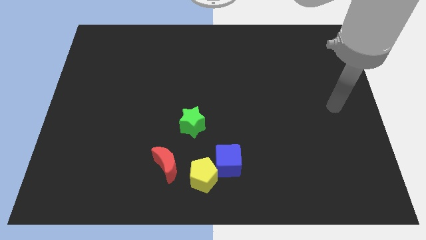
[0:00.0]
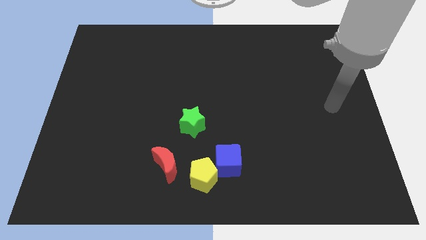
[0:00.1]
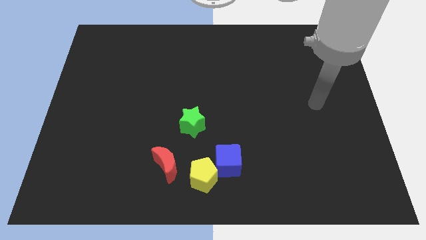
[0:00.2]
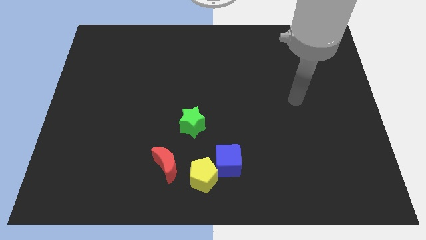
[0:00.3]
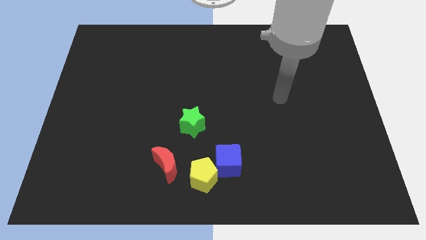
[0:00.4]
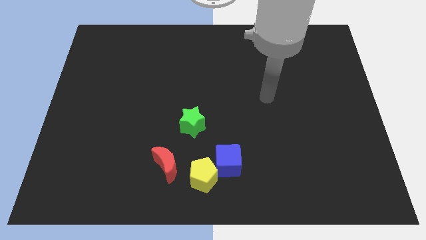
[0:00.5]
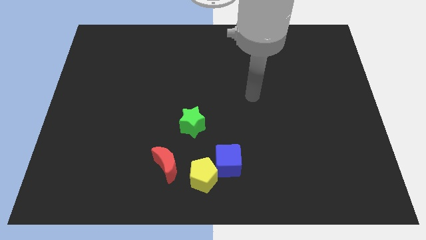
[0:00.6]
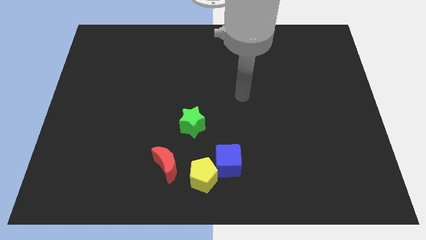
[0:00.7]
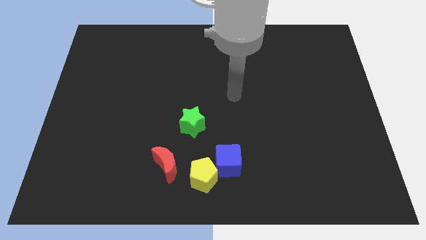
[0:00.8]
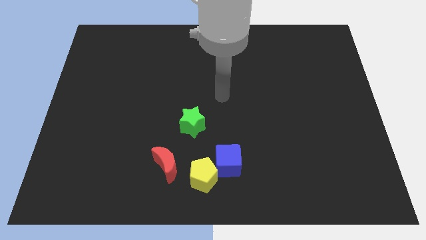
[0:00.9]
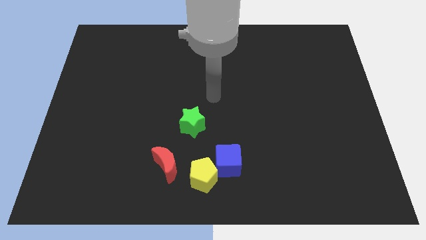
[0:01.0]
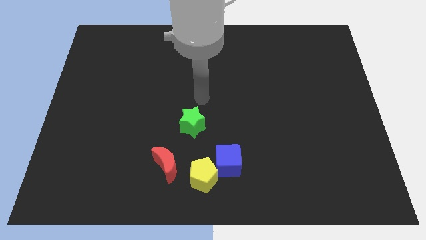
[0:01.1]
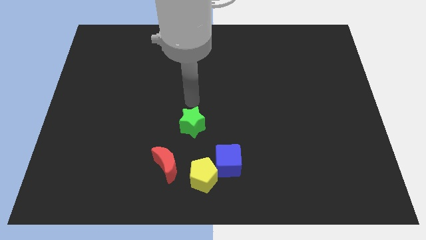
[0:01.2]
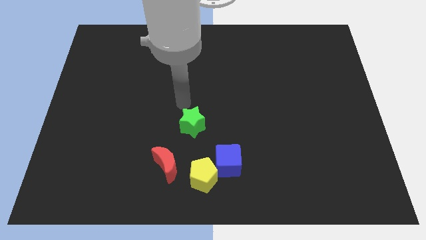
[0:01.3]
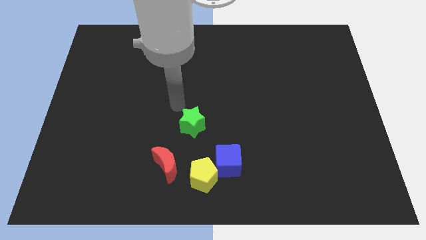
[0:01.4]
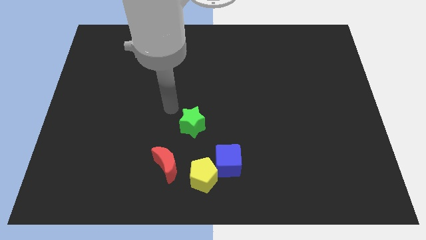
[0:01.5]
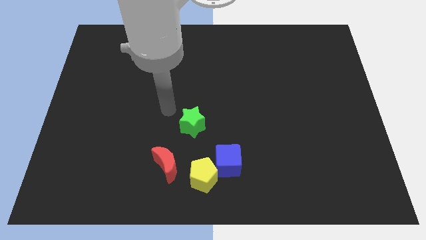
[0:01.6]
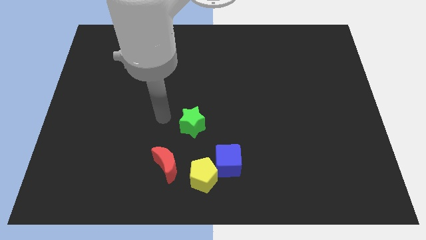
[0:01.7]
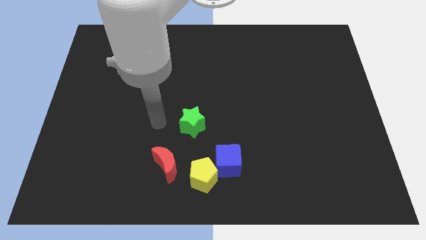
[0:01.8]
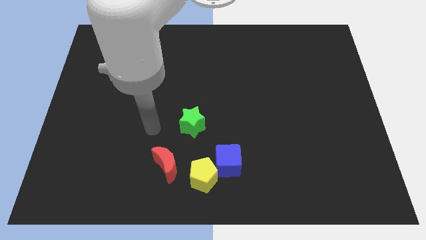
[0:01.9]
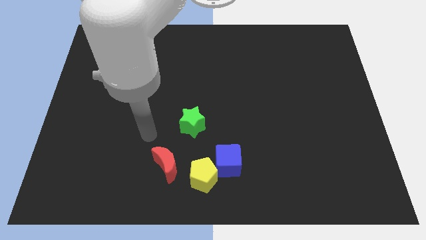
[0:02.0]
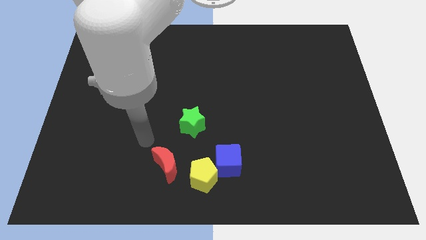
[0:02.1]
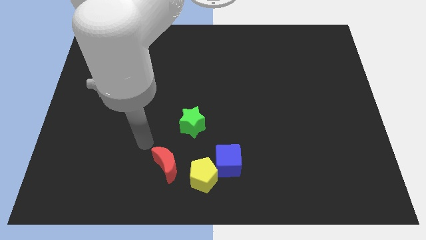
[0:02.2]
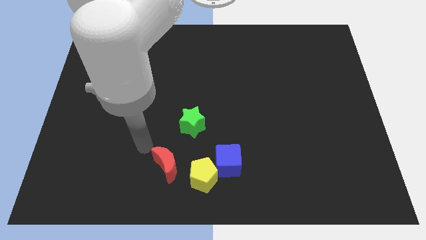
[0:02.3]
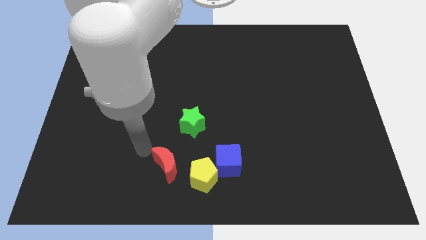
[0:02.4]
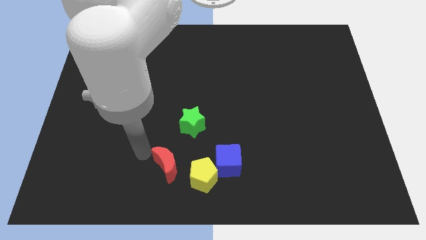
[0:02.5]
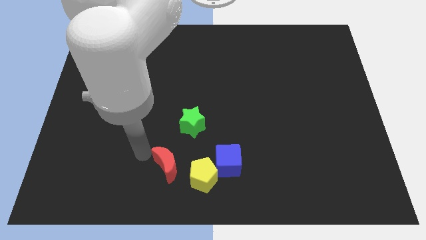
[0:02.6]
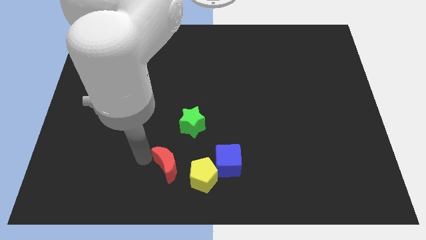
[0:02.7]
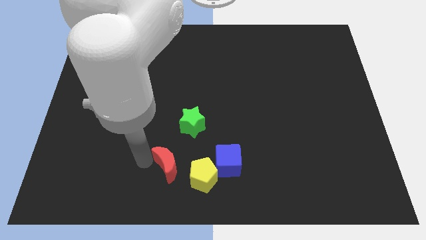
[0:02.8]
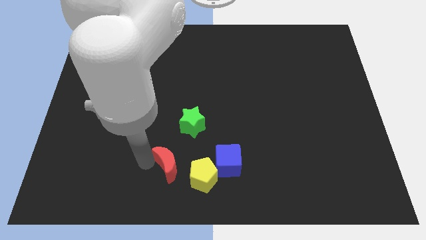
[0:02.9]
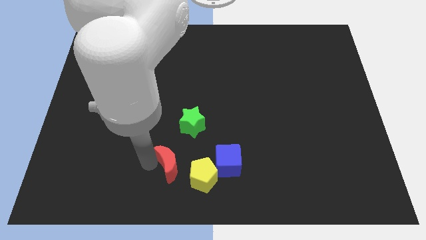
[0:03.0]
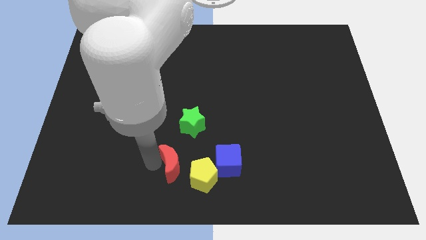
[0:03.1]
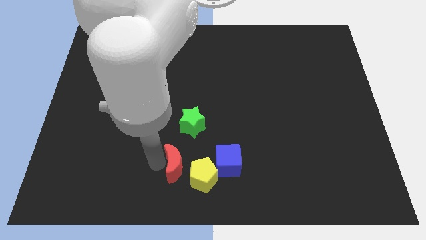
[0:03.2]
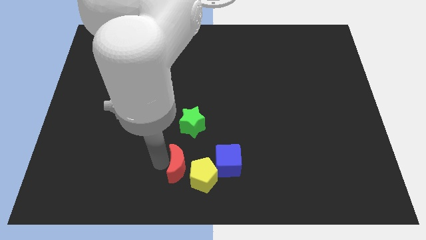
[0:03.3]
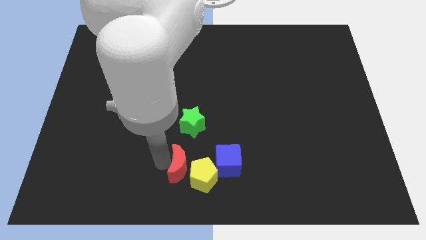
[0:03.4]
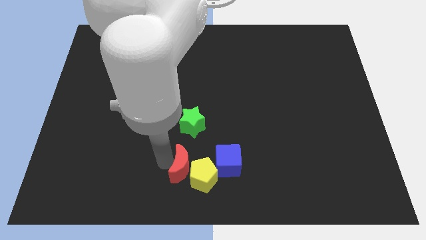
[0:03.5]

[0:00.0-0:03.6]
push the moon to the pentagon

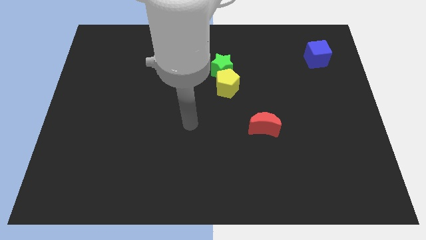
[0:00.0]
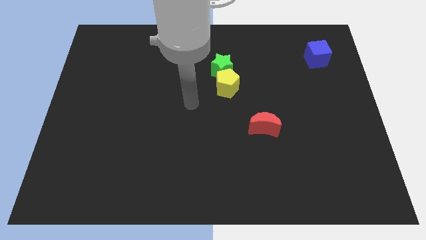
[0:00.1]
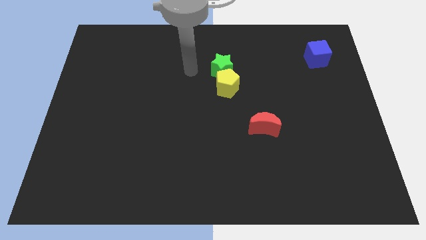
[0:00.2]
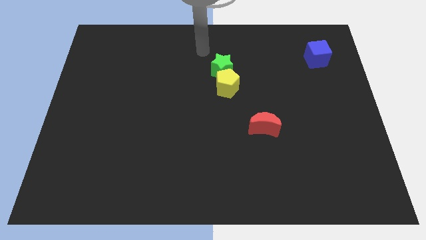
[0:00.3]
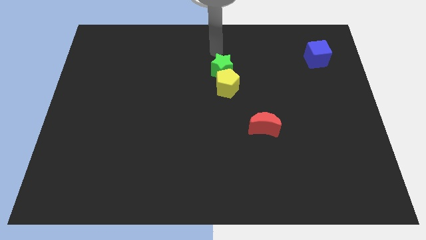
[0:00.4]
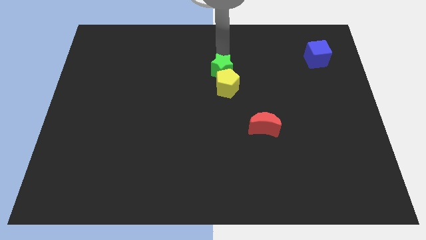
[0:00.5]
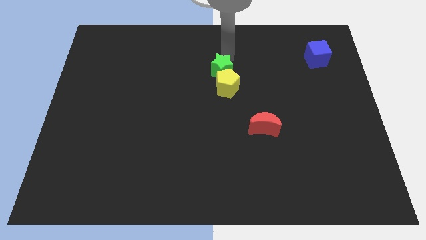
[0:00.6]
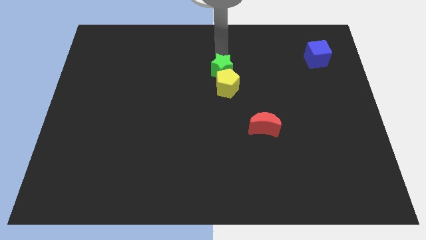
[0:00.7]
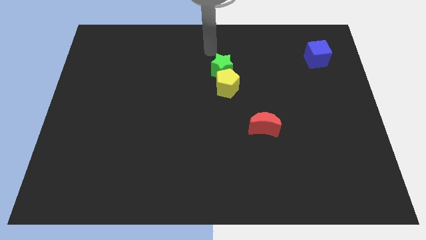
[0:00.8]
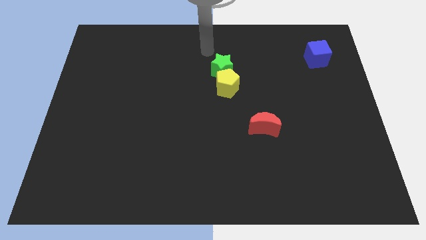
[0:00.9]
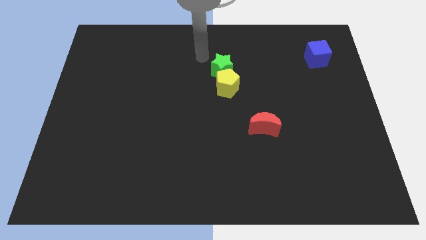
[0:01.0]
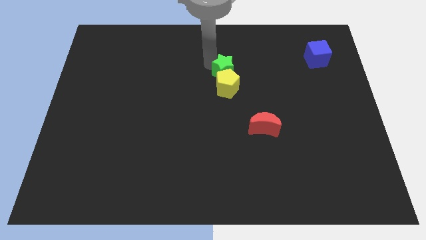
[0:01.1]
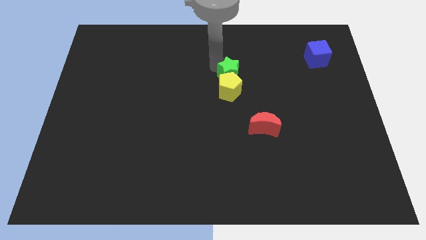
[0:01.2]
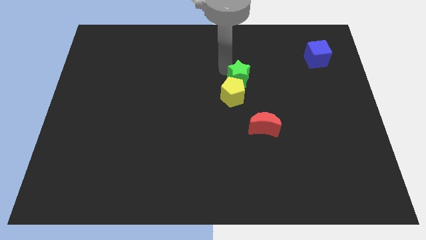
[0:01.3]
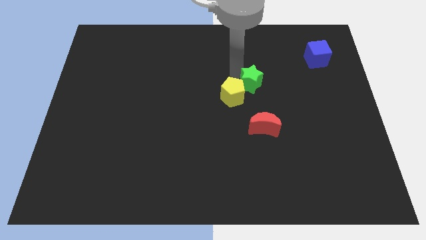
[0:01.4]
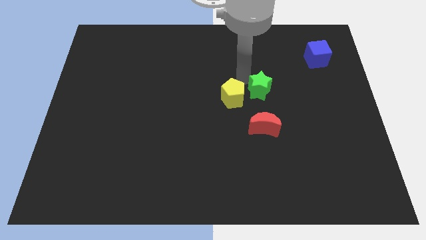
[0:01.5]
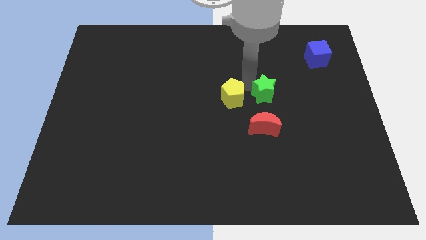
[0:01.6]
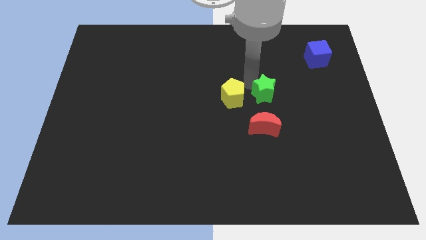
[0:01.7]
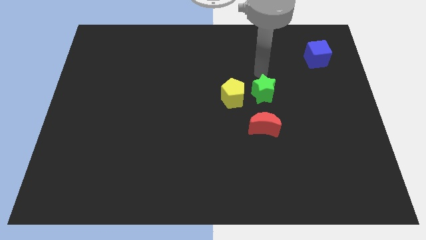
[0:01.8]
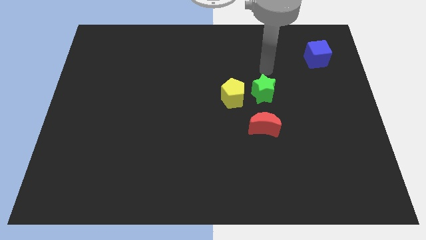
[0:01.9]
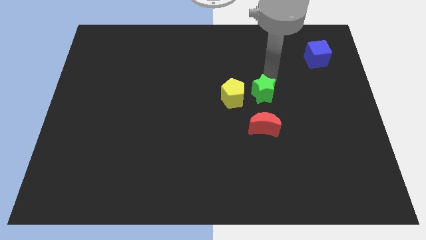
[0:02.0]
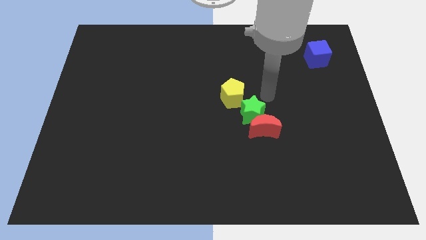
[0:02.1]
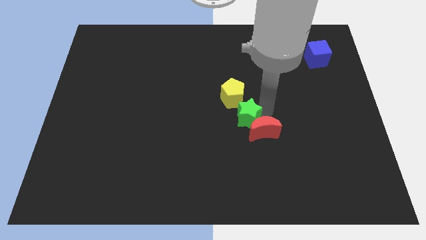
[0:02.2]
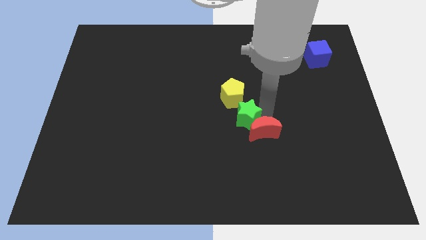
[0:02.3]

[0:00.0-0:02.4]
slide the green block next to the moon

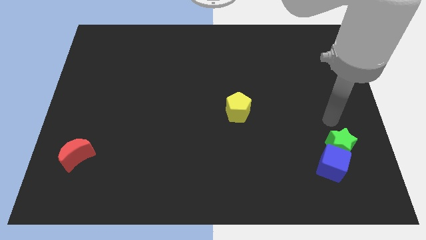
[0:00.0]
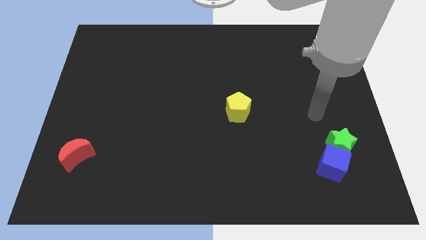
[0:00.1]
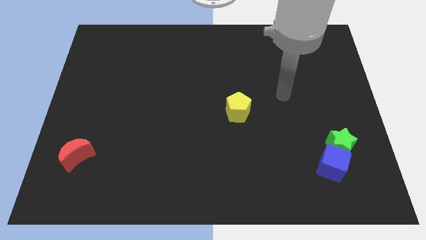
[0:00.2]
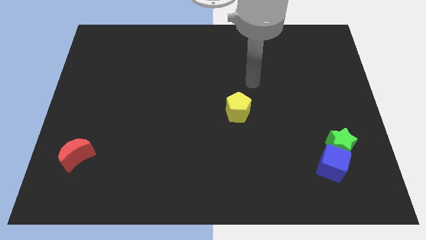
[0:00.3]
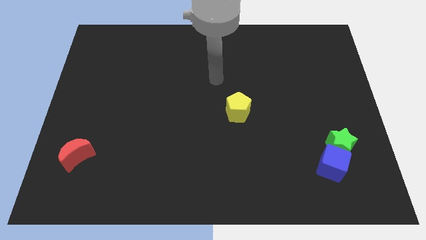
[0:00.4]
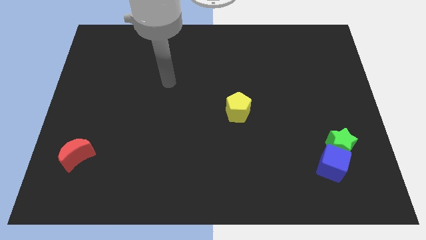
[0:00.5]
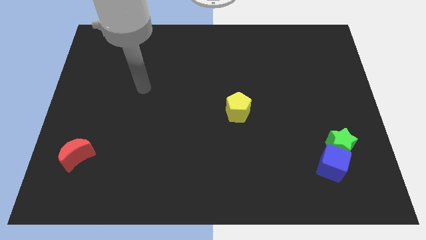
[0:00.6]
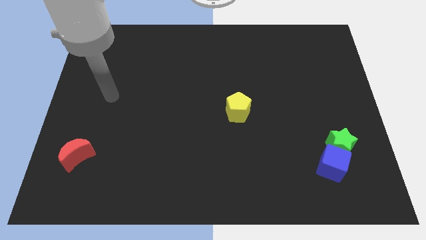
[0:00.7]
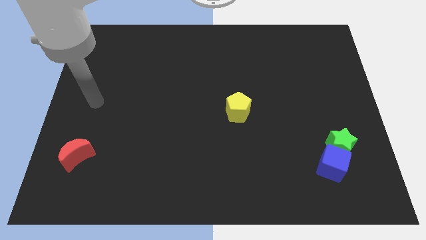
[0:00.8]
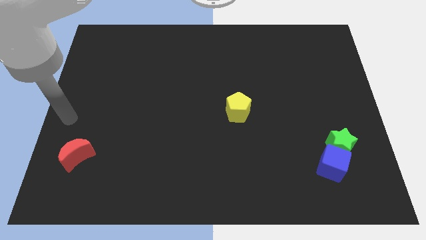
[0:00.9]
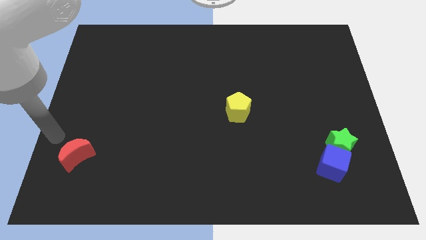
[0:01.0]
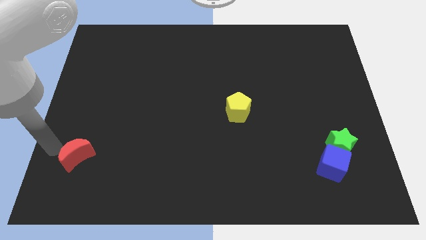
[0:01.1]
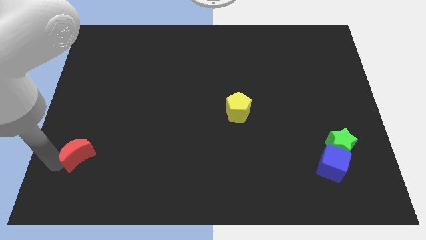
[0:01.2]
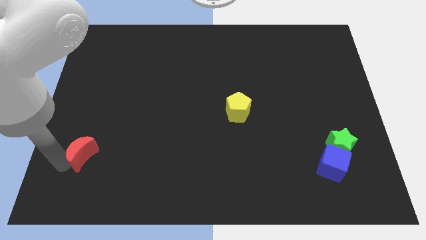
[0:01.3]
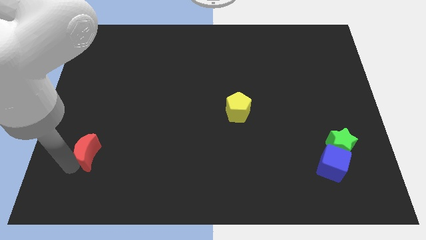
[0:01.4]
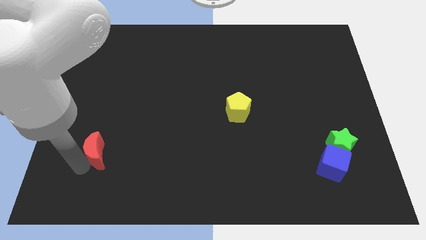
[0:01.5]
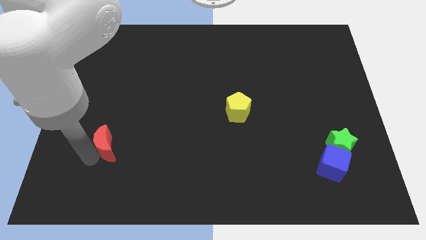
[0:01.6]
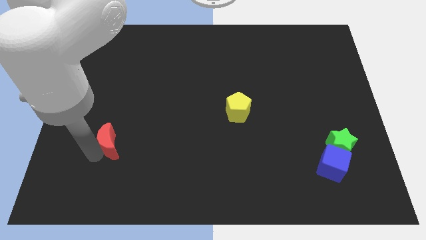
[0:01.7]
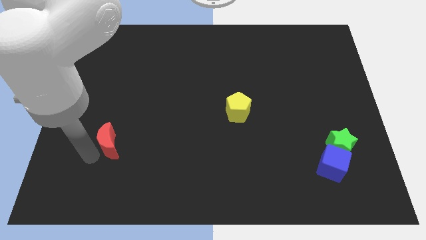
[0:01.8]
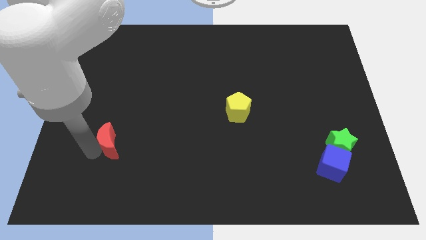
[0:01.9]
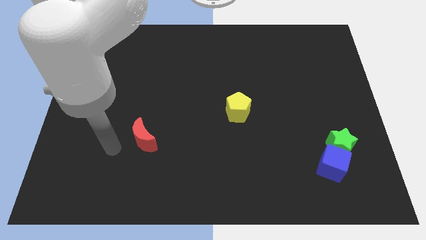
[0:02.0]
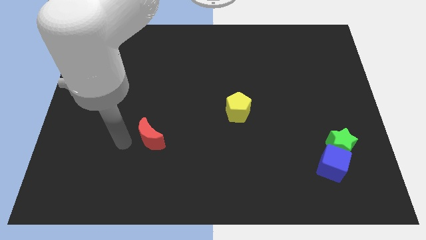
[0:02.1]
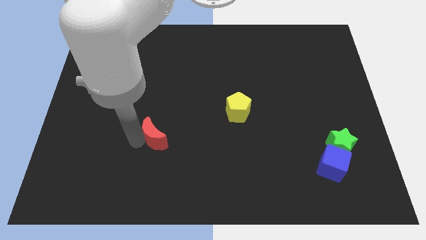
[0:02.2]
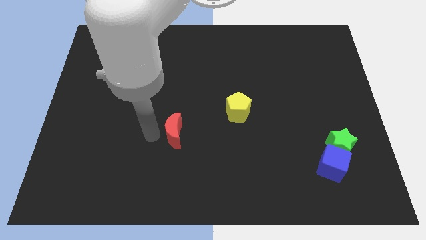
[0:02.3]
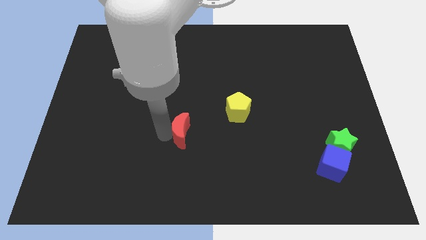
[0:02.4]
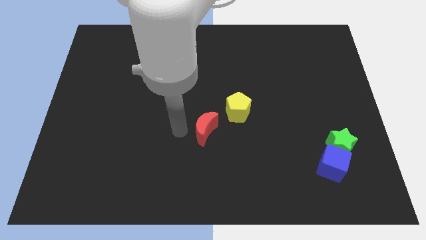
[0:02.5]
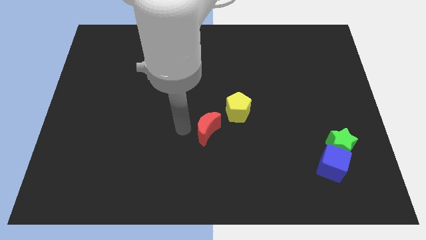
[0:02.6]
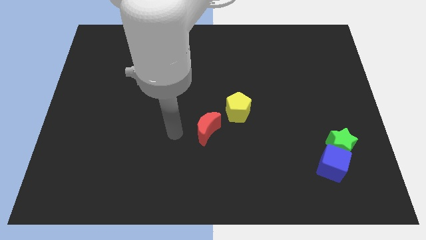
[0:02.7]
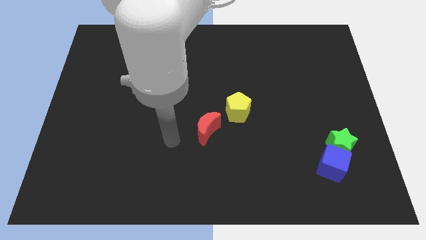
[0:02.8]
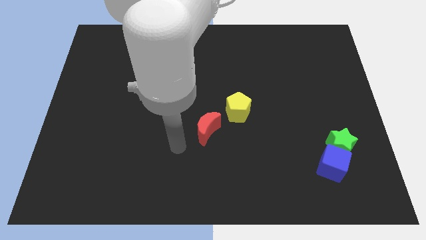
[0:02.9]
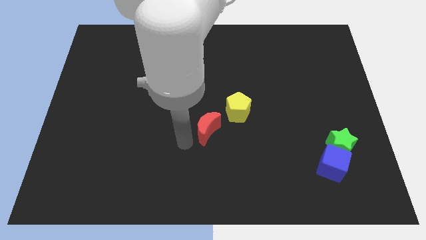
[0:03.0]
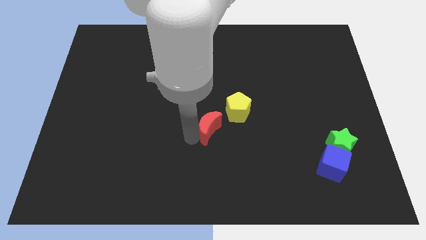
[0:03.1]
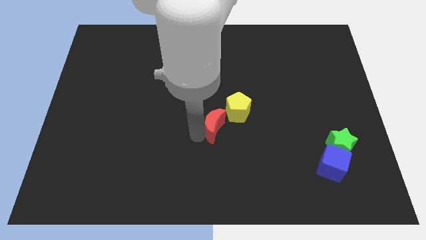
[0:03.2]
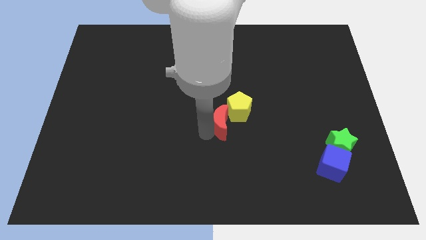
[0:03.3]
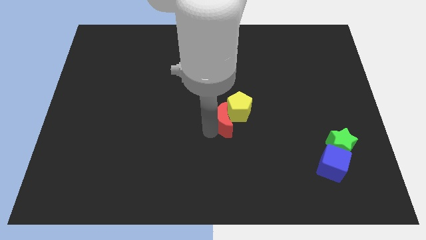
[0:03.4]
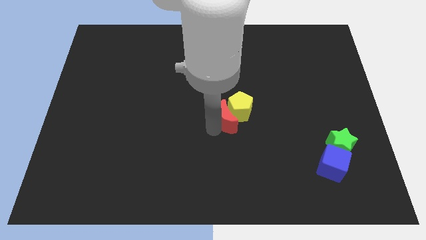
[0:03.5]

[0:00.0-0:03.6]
put the red moon to the yellow pentagon
